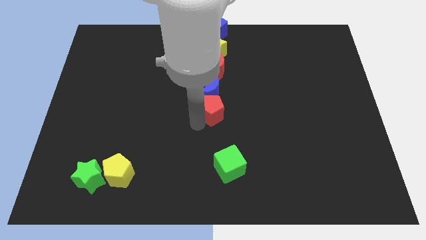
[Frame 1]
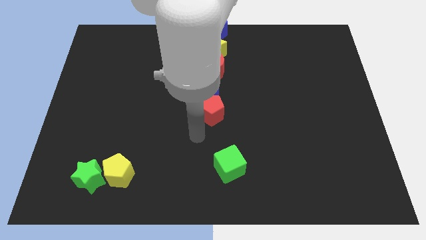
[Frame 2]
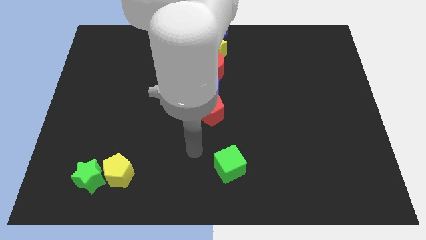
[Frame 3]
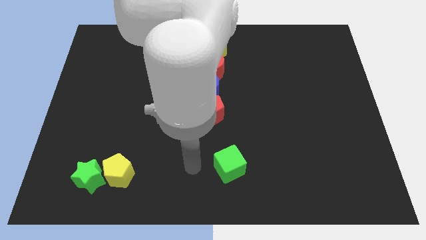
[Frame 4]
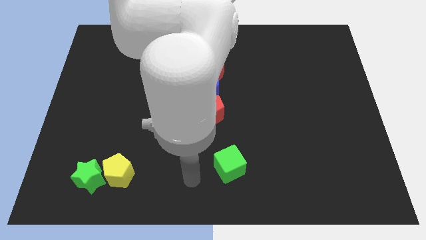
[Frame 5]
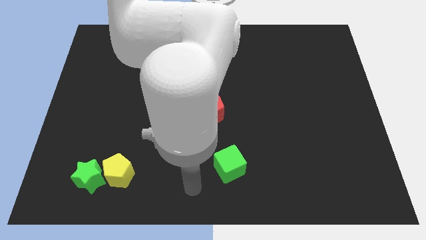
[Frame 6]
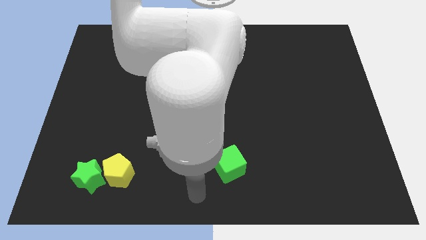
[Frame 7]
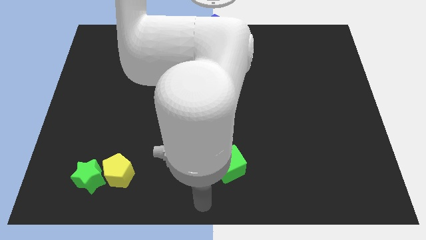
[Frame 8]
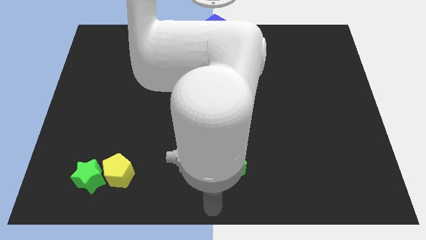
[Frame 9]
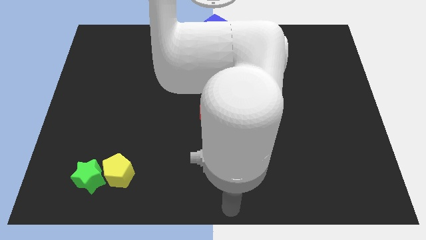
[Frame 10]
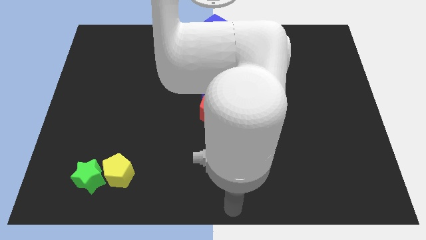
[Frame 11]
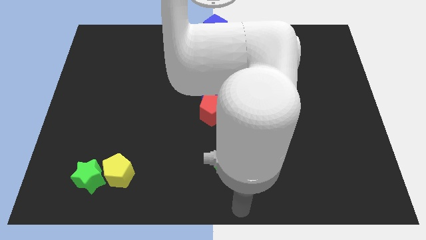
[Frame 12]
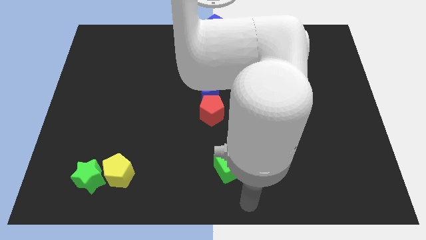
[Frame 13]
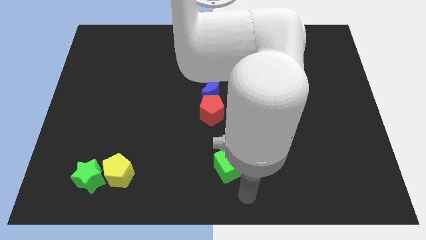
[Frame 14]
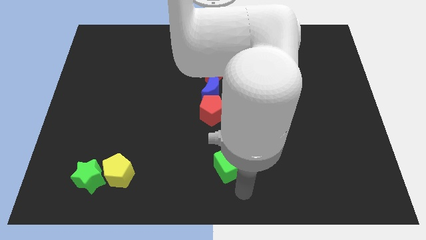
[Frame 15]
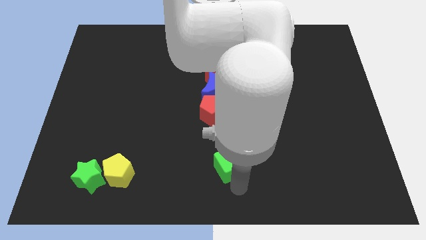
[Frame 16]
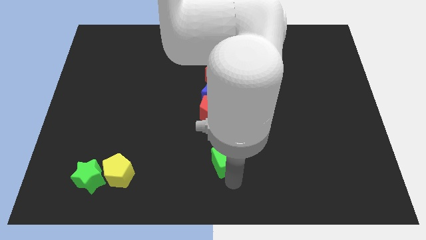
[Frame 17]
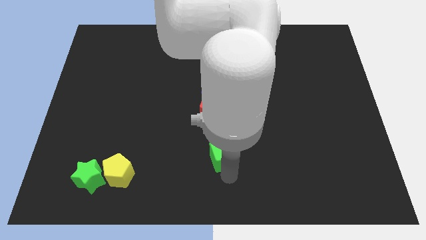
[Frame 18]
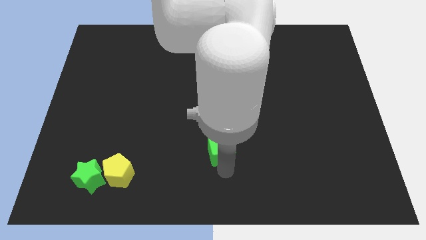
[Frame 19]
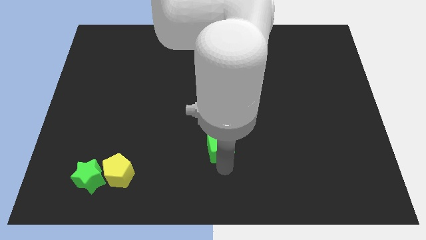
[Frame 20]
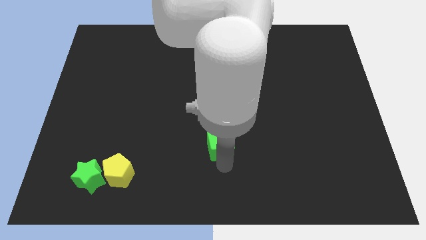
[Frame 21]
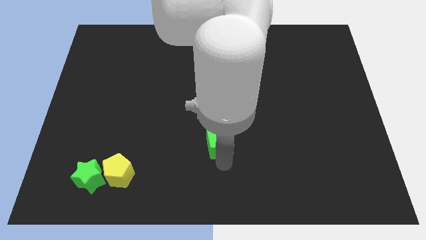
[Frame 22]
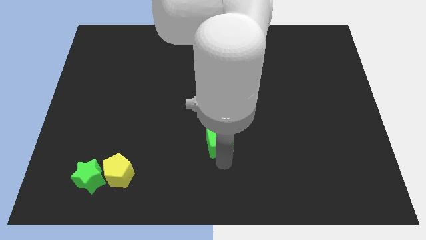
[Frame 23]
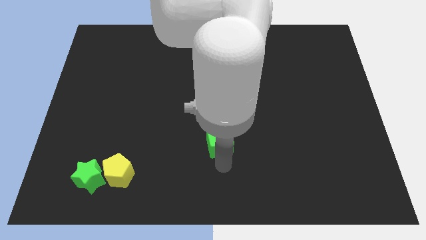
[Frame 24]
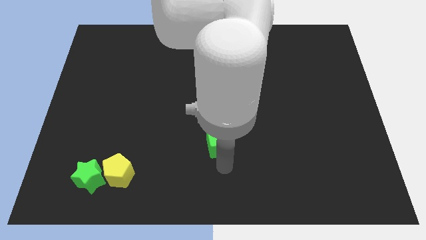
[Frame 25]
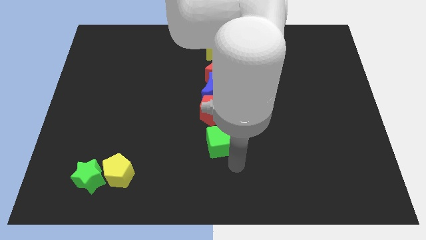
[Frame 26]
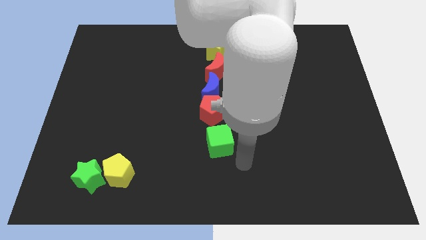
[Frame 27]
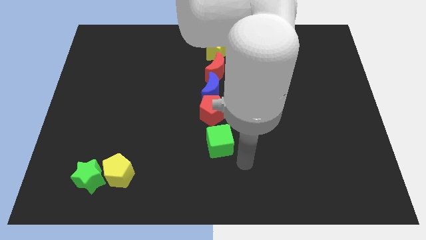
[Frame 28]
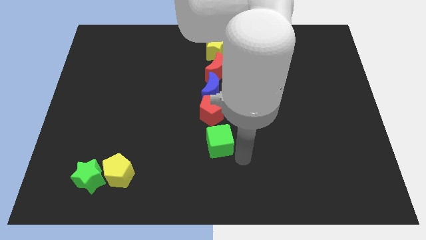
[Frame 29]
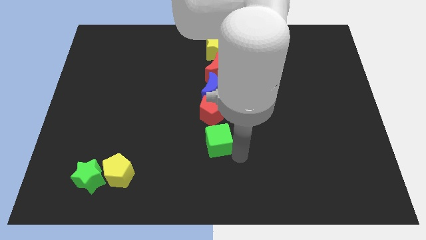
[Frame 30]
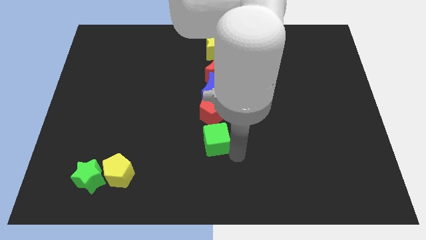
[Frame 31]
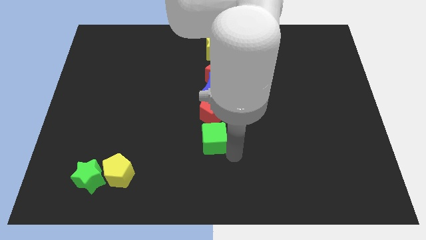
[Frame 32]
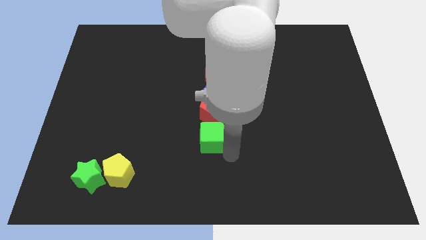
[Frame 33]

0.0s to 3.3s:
move the green cube to the bottom of the red pentagon

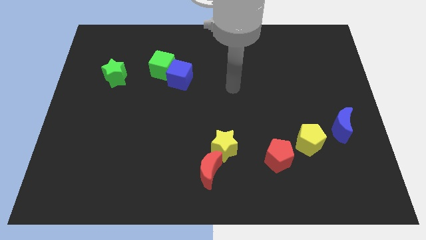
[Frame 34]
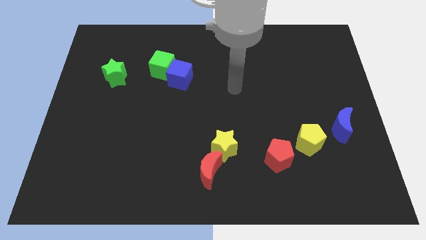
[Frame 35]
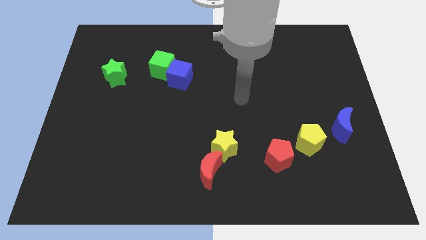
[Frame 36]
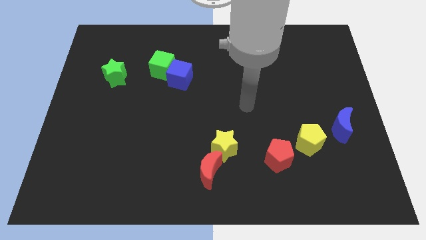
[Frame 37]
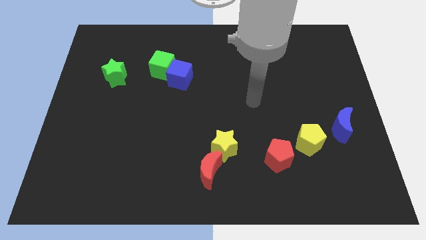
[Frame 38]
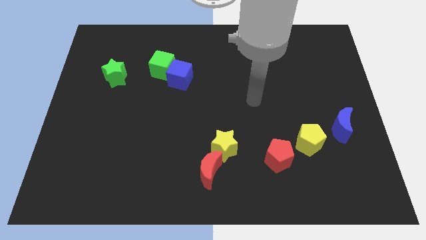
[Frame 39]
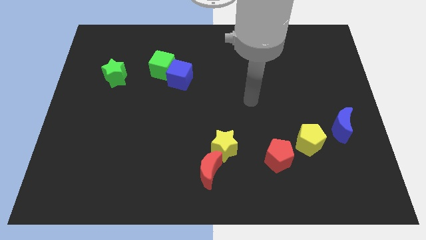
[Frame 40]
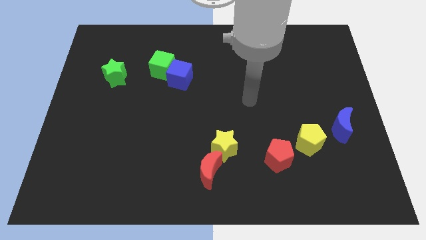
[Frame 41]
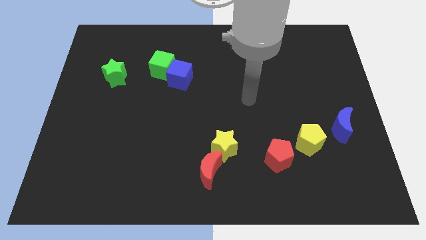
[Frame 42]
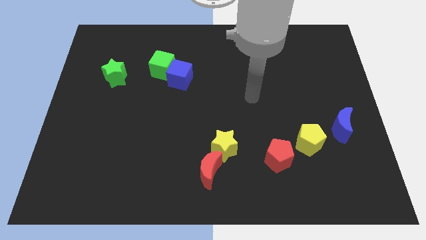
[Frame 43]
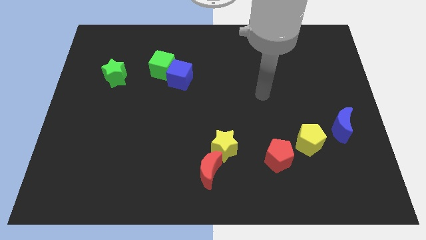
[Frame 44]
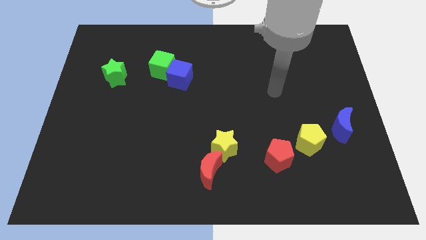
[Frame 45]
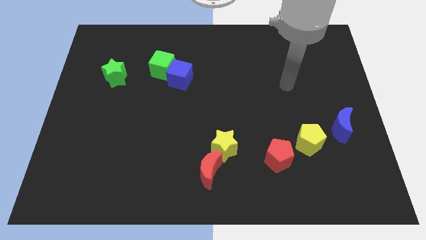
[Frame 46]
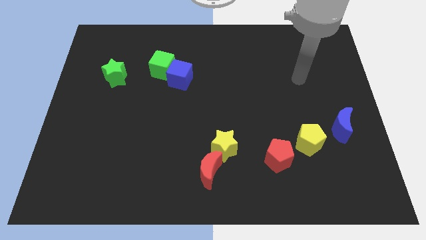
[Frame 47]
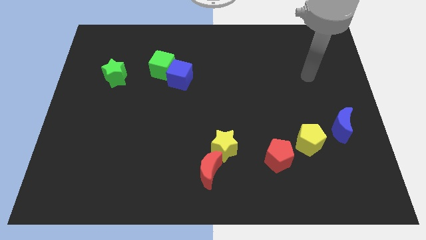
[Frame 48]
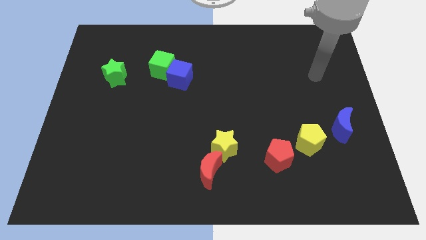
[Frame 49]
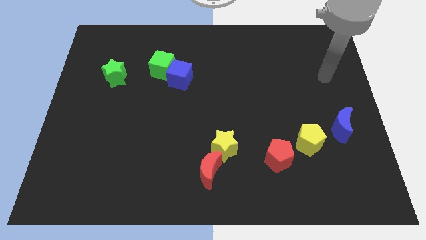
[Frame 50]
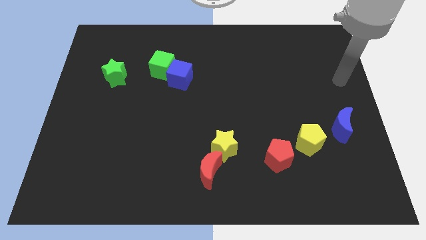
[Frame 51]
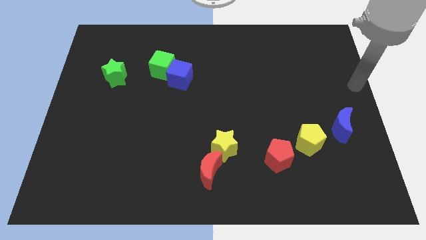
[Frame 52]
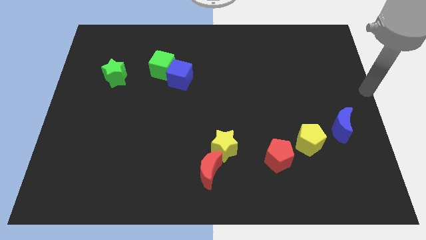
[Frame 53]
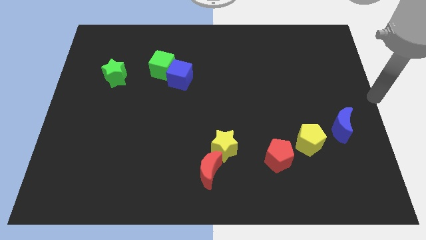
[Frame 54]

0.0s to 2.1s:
move your arm to the center right

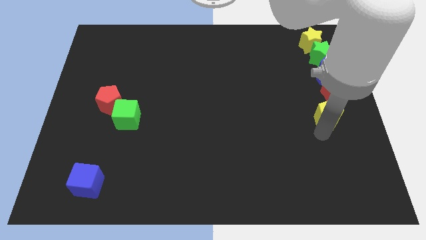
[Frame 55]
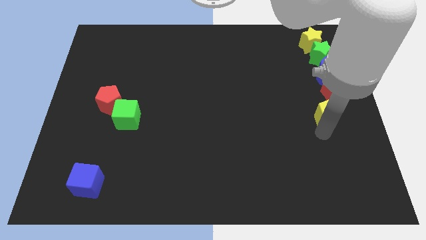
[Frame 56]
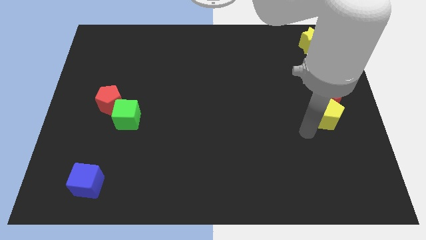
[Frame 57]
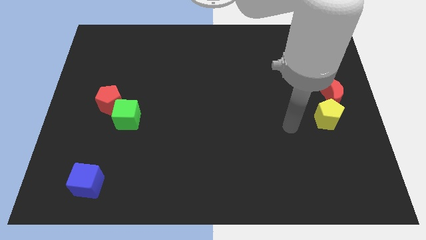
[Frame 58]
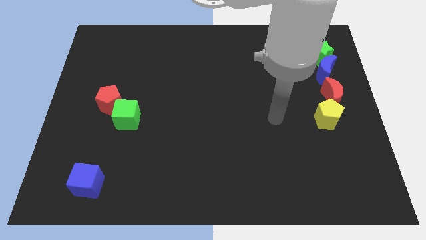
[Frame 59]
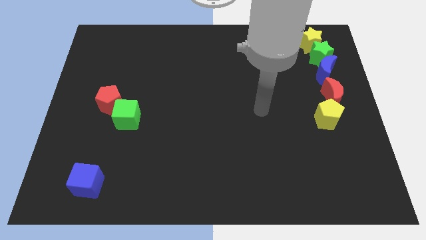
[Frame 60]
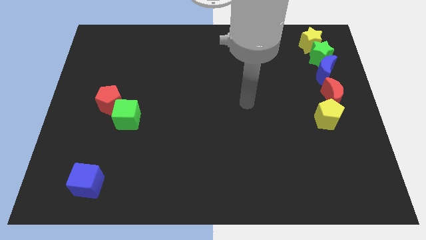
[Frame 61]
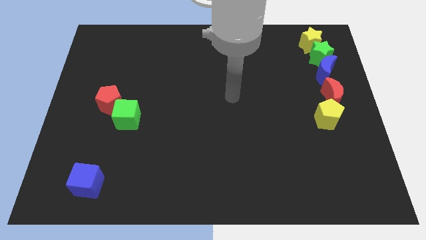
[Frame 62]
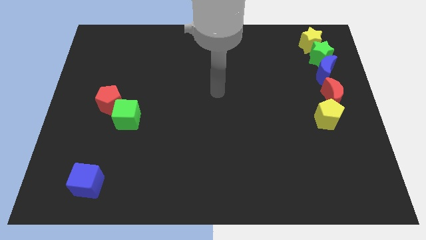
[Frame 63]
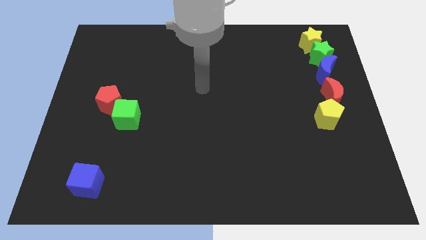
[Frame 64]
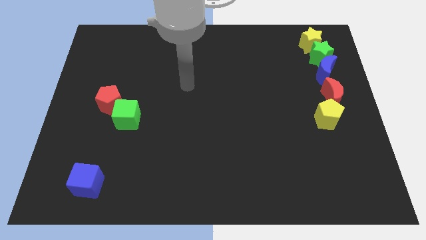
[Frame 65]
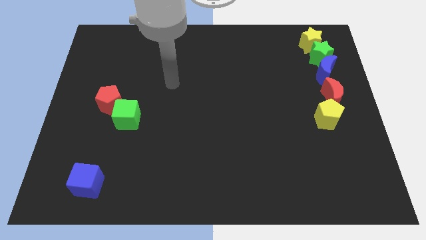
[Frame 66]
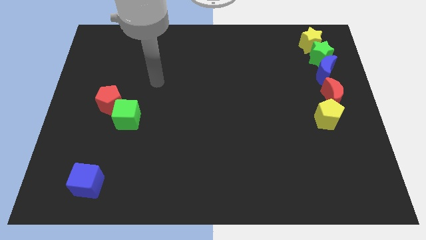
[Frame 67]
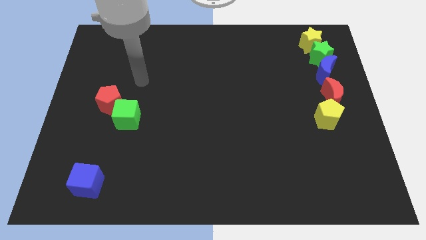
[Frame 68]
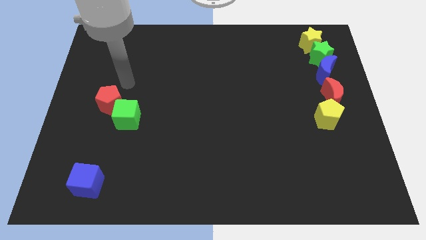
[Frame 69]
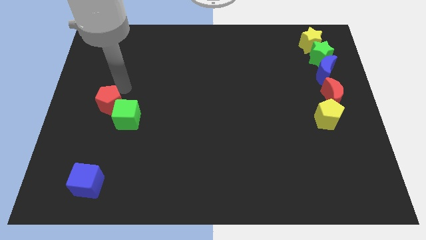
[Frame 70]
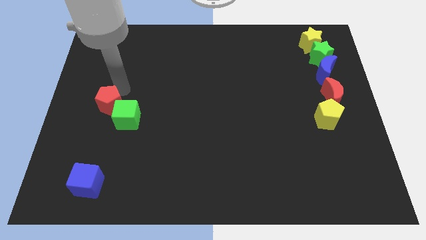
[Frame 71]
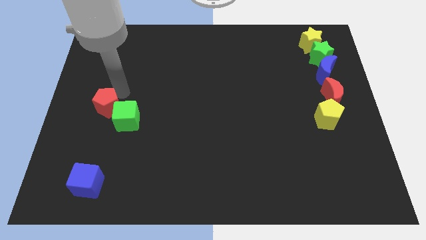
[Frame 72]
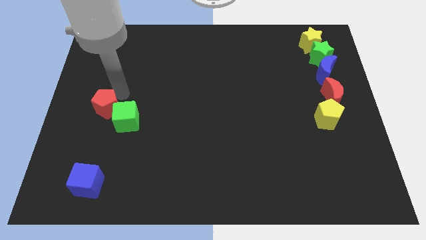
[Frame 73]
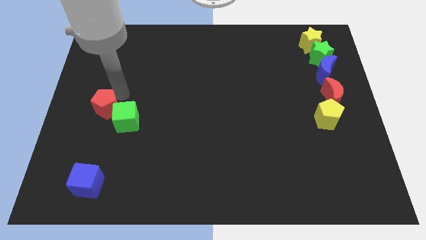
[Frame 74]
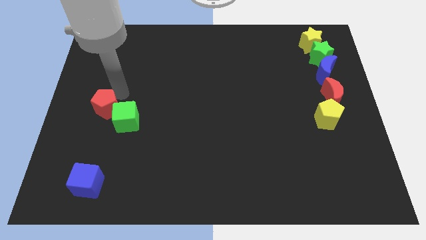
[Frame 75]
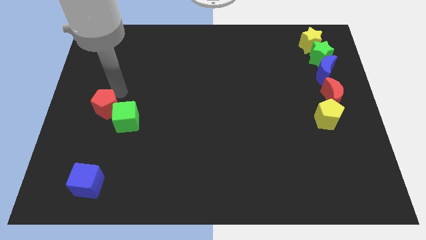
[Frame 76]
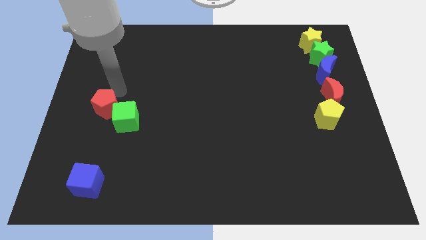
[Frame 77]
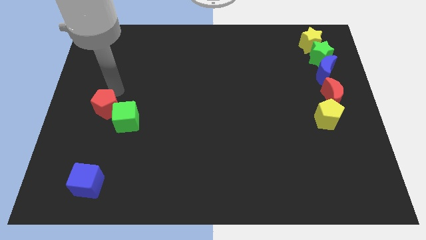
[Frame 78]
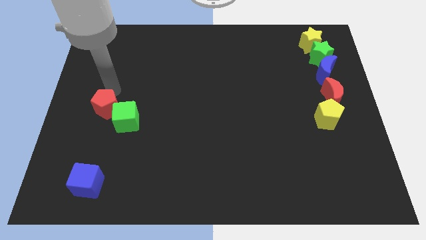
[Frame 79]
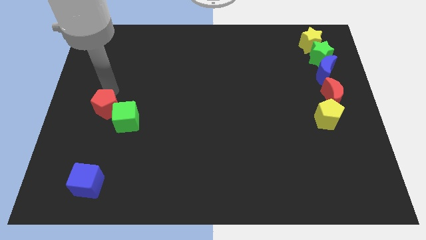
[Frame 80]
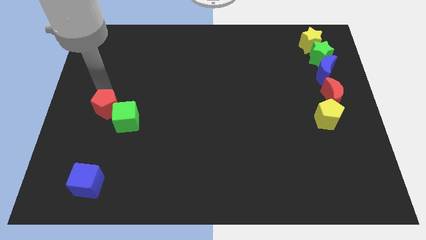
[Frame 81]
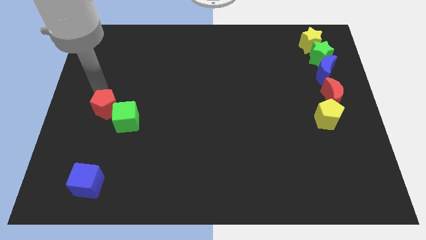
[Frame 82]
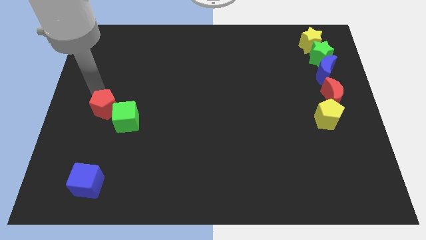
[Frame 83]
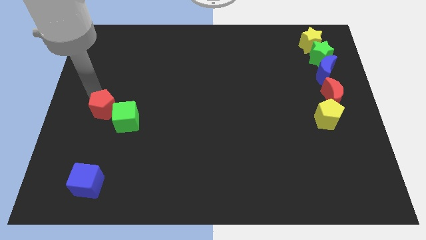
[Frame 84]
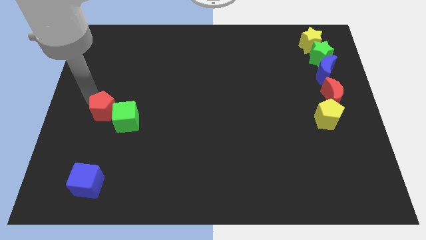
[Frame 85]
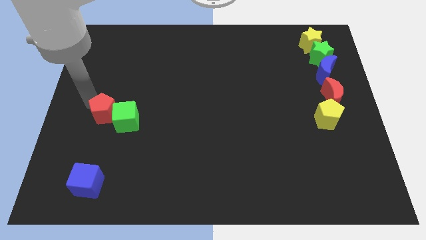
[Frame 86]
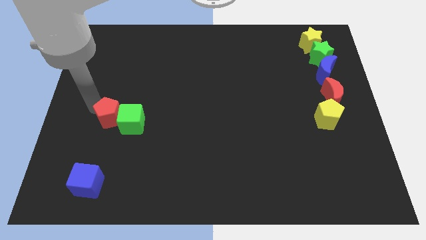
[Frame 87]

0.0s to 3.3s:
move your arm away form the red pentagon

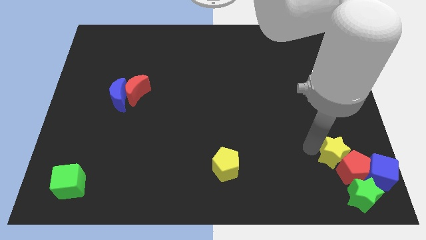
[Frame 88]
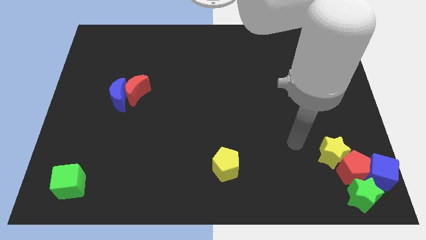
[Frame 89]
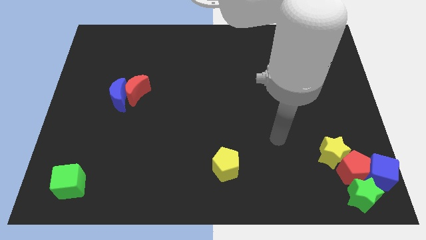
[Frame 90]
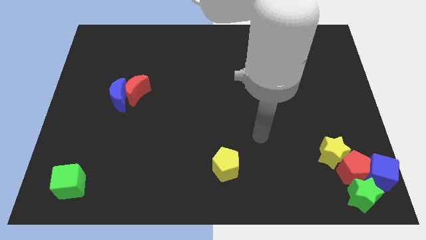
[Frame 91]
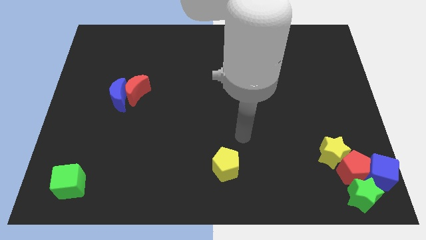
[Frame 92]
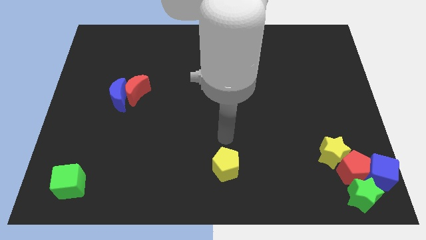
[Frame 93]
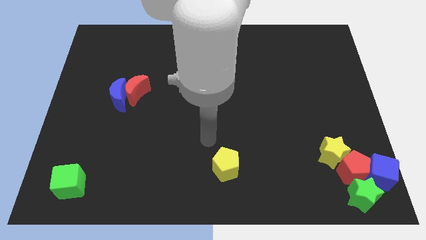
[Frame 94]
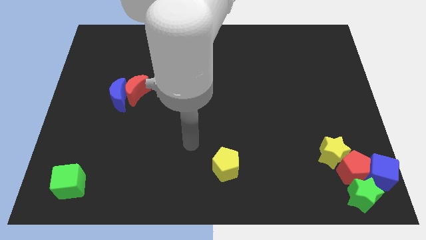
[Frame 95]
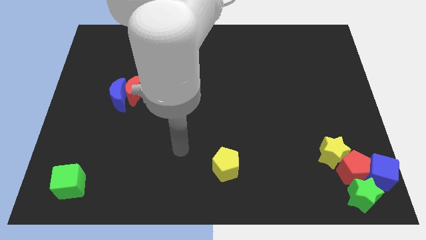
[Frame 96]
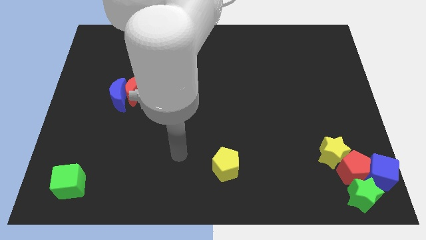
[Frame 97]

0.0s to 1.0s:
move your arm away from the yellow star
